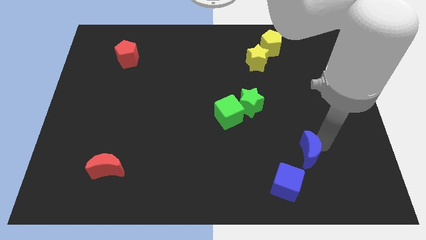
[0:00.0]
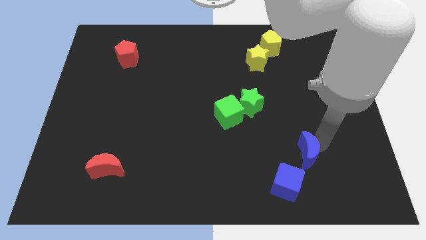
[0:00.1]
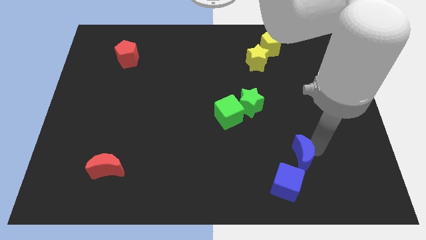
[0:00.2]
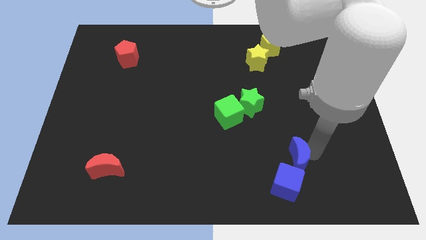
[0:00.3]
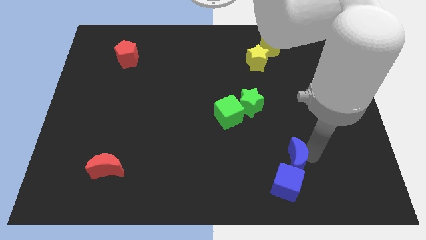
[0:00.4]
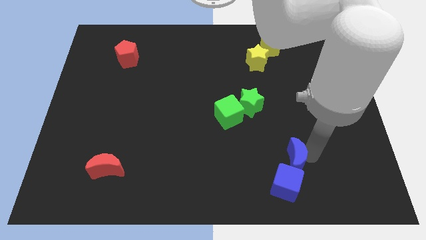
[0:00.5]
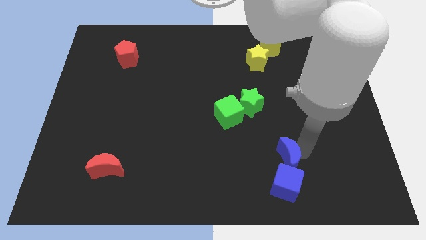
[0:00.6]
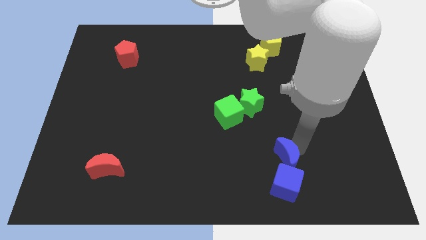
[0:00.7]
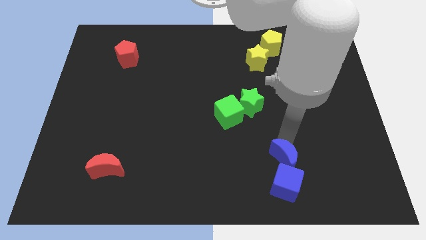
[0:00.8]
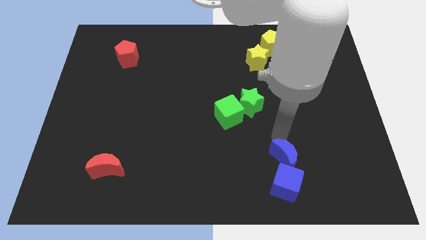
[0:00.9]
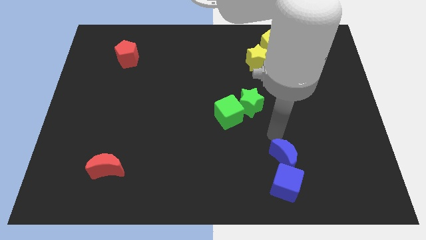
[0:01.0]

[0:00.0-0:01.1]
place the blue crescent towards the top of the blue cube

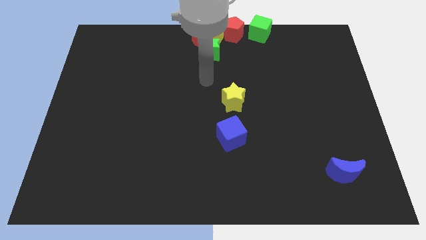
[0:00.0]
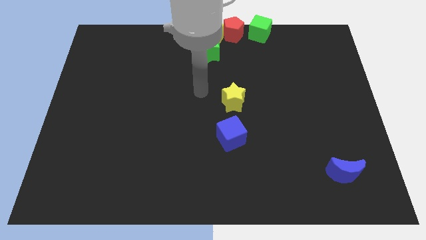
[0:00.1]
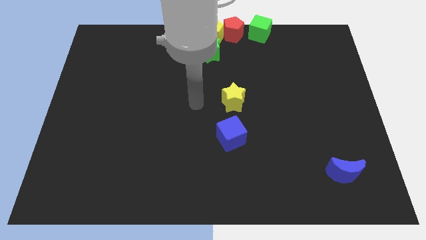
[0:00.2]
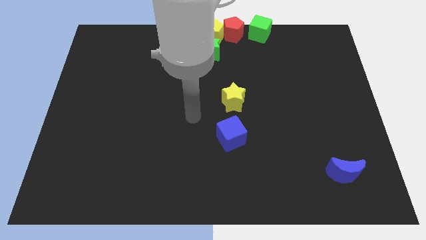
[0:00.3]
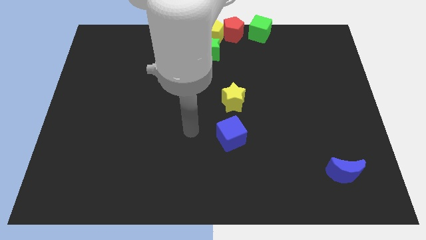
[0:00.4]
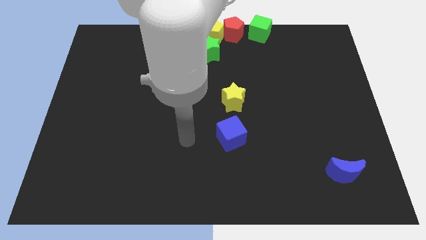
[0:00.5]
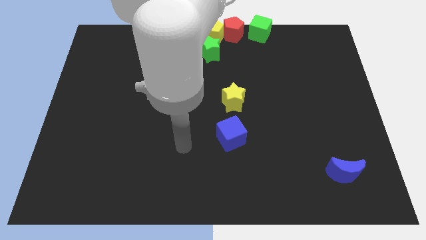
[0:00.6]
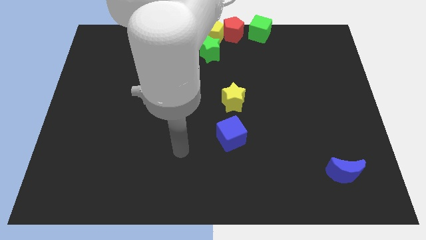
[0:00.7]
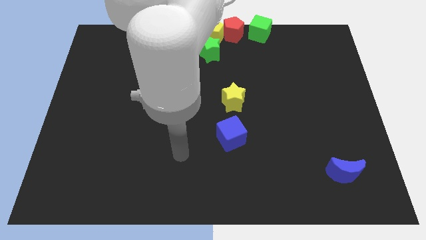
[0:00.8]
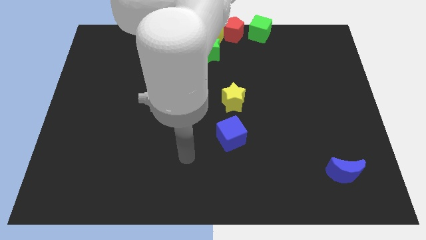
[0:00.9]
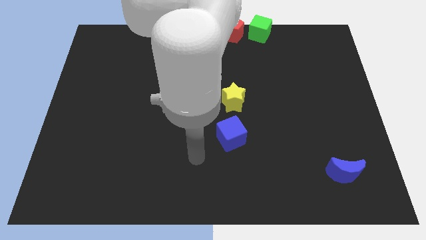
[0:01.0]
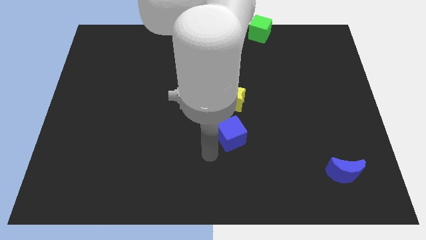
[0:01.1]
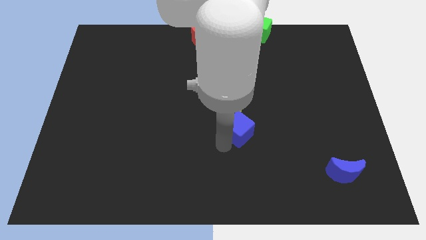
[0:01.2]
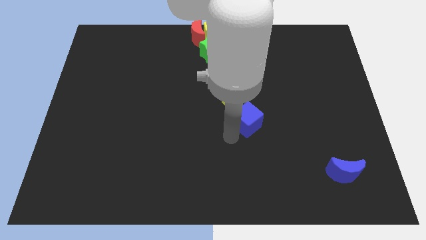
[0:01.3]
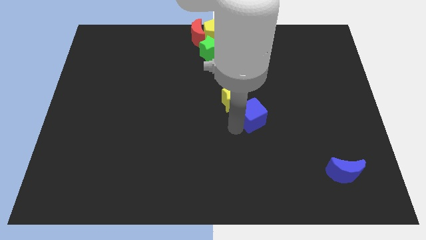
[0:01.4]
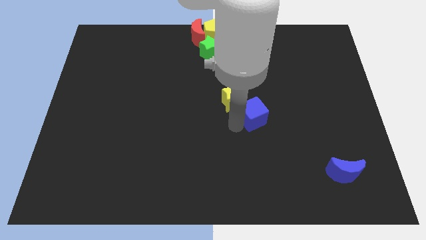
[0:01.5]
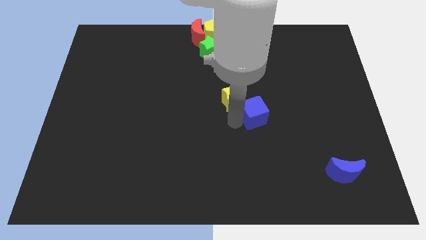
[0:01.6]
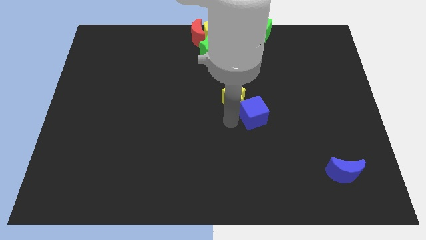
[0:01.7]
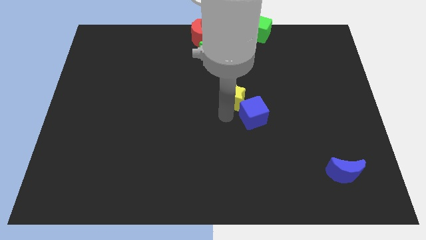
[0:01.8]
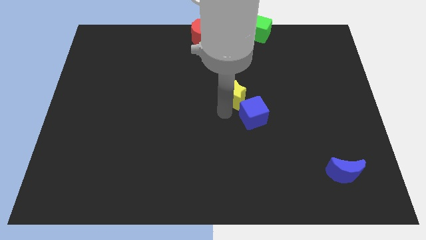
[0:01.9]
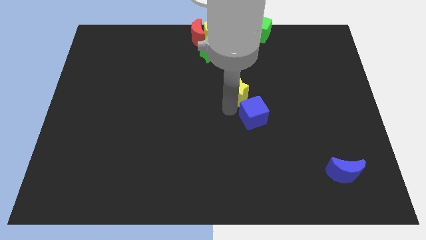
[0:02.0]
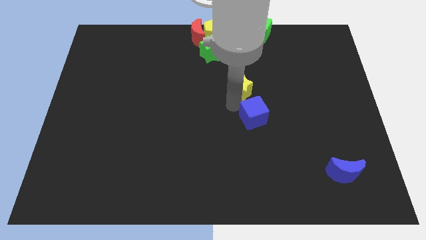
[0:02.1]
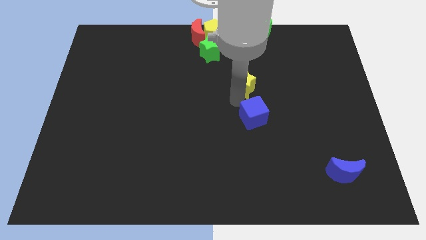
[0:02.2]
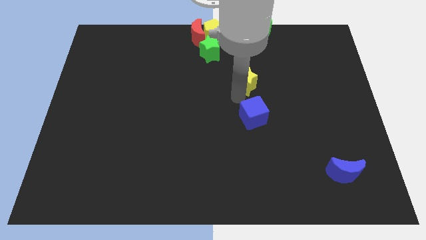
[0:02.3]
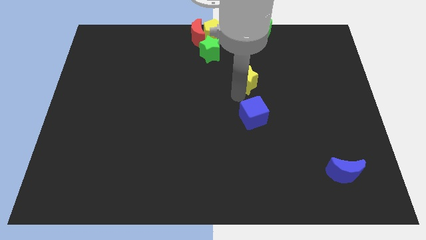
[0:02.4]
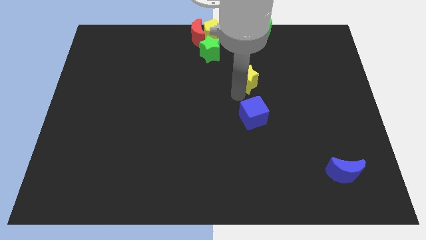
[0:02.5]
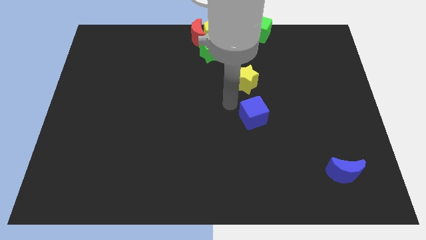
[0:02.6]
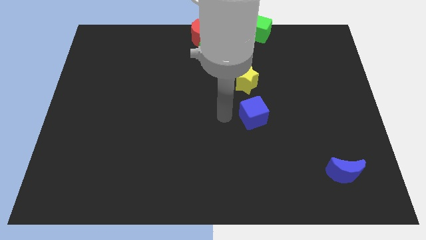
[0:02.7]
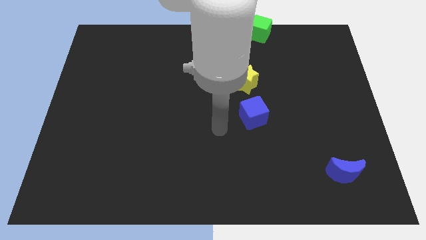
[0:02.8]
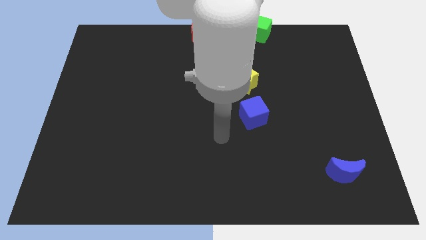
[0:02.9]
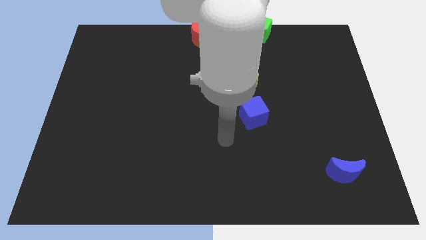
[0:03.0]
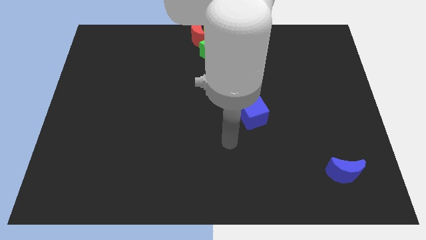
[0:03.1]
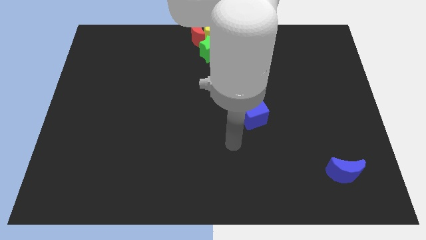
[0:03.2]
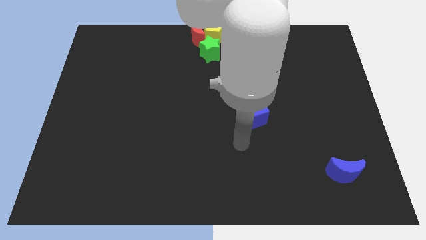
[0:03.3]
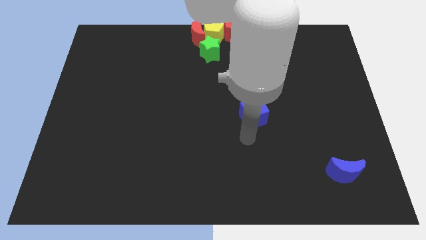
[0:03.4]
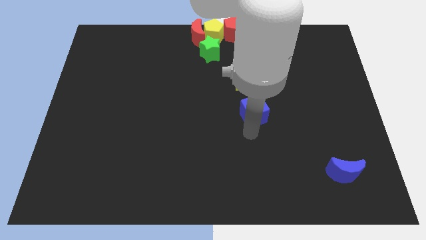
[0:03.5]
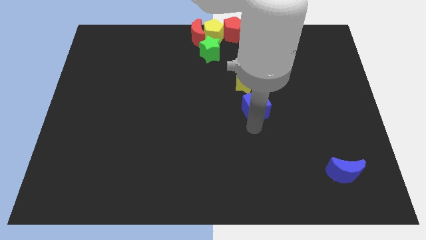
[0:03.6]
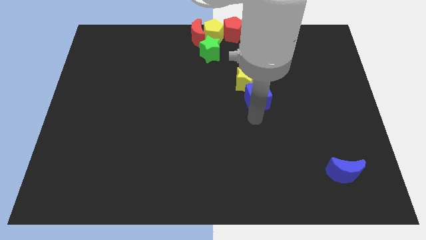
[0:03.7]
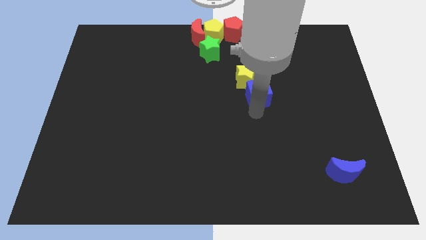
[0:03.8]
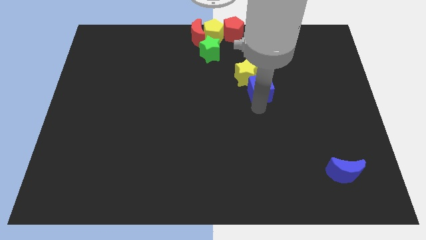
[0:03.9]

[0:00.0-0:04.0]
slide blue cube into the yellow star

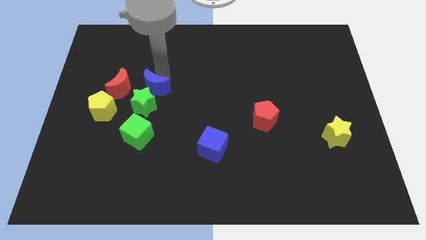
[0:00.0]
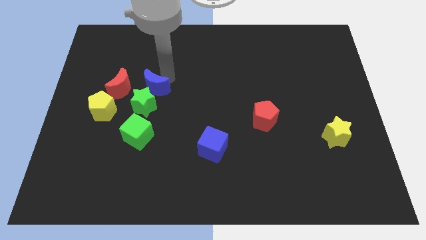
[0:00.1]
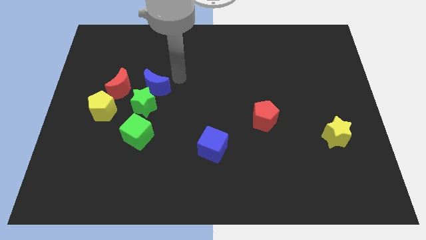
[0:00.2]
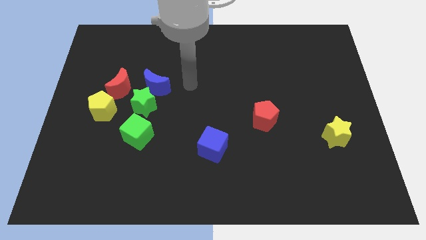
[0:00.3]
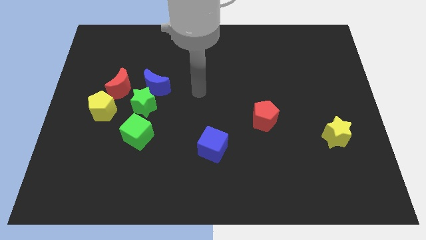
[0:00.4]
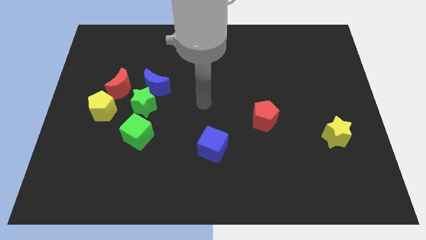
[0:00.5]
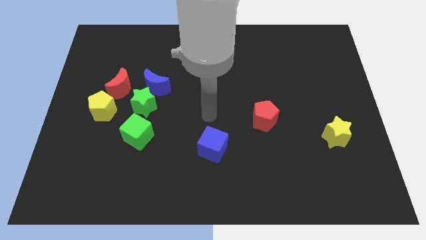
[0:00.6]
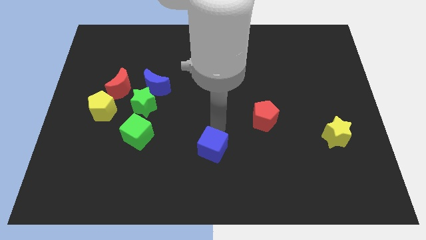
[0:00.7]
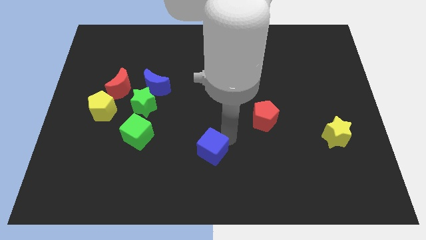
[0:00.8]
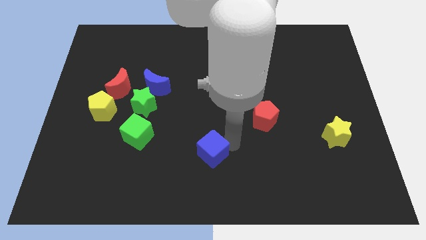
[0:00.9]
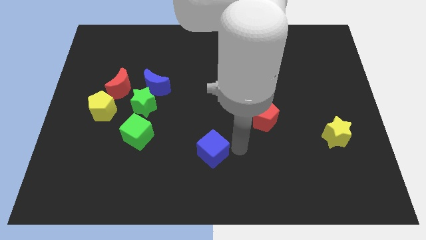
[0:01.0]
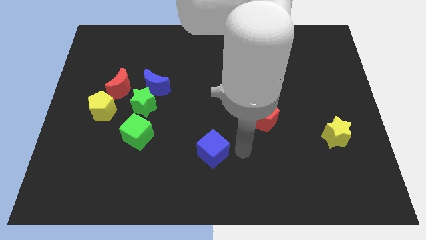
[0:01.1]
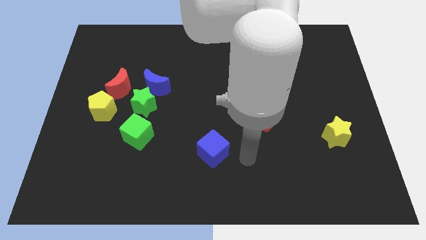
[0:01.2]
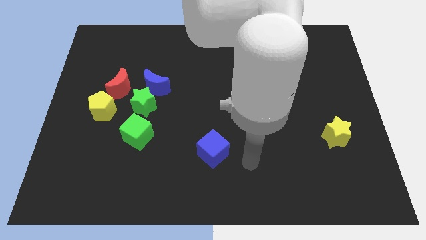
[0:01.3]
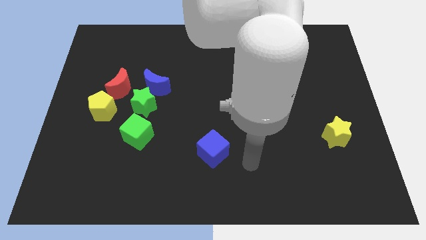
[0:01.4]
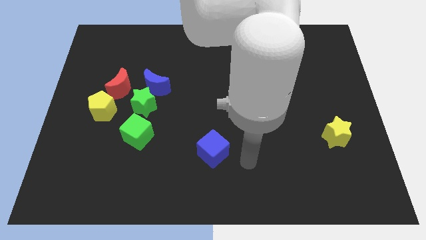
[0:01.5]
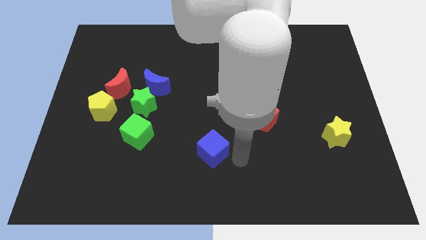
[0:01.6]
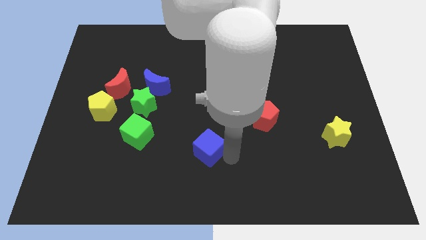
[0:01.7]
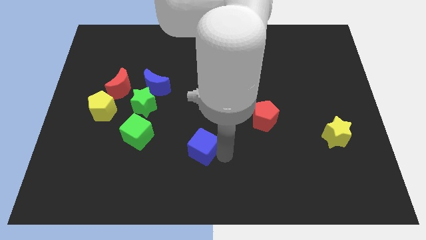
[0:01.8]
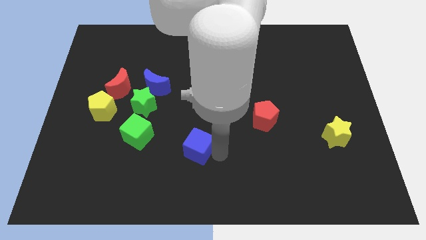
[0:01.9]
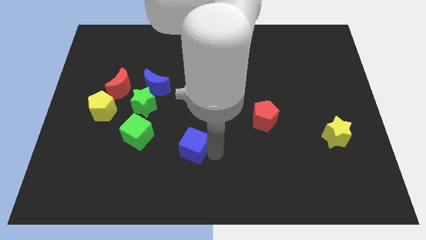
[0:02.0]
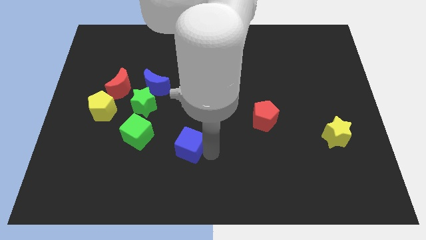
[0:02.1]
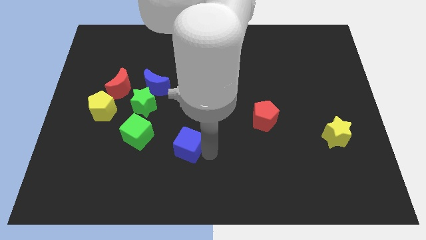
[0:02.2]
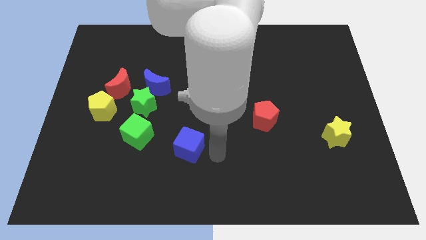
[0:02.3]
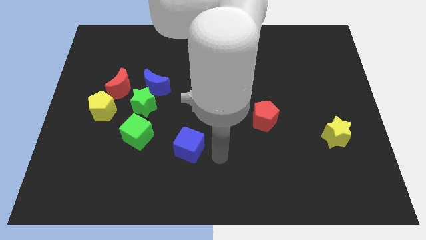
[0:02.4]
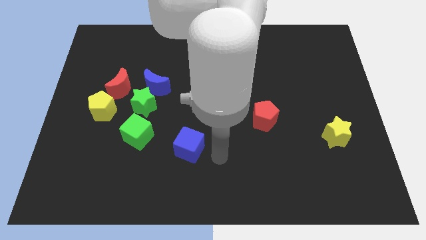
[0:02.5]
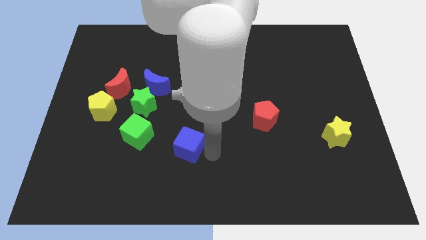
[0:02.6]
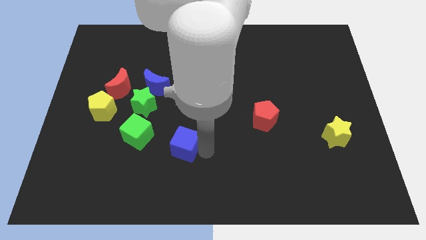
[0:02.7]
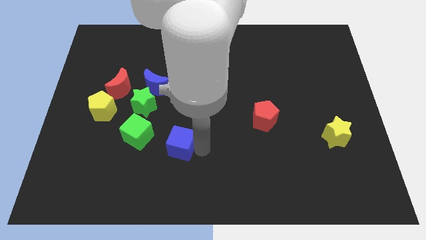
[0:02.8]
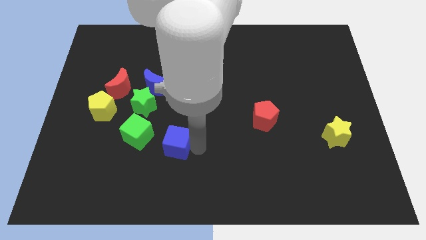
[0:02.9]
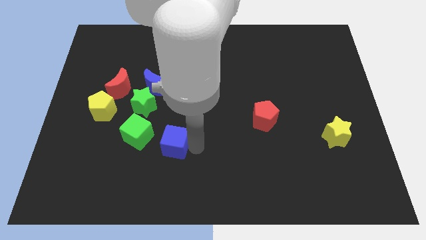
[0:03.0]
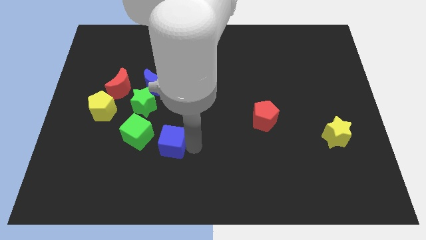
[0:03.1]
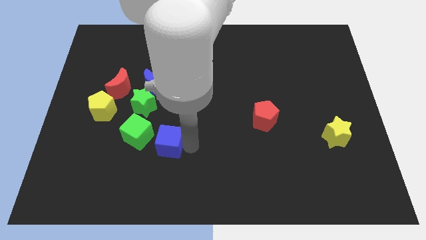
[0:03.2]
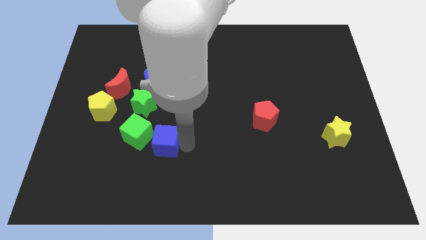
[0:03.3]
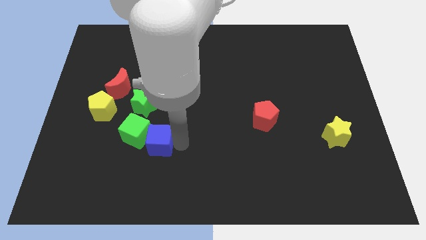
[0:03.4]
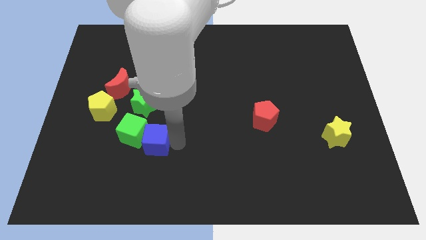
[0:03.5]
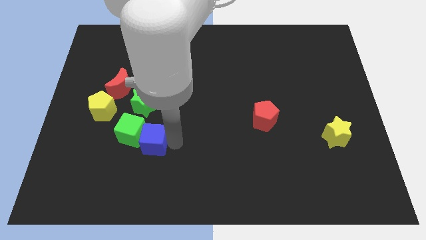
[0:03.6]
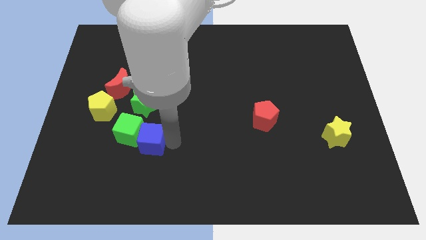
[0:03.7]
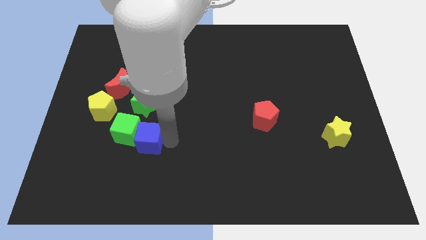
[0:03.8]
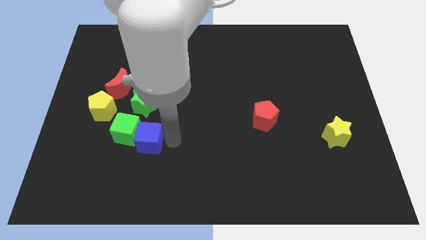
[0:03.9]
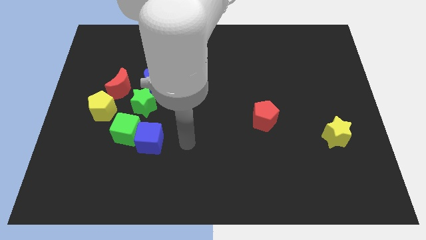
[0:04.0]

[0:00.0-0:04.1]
move blue cube into green cube
